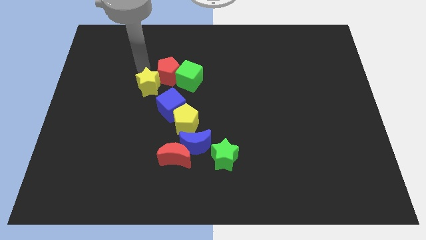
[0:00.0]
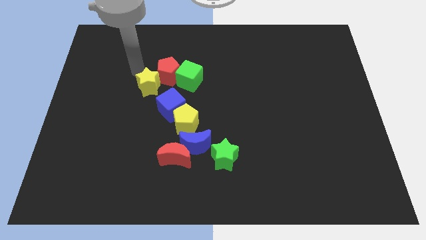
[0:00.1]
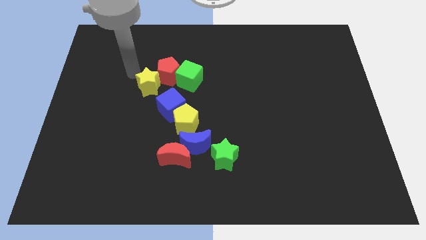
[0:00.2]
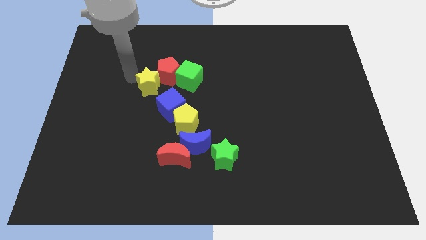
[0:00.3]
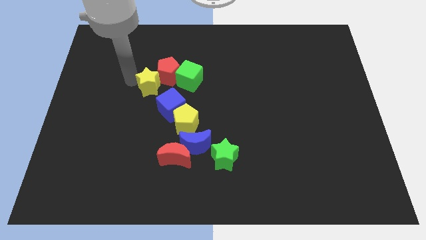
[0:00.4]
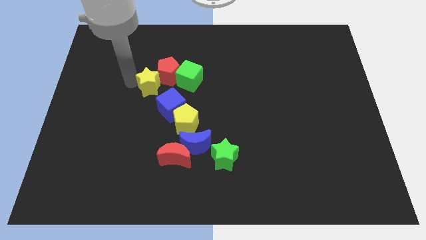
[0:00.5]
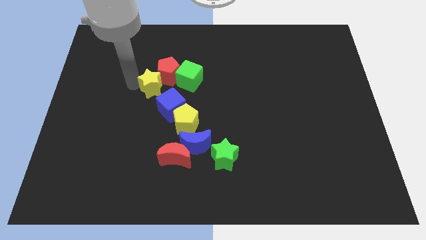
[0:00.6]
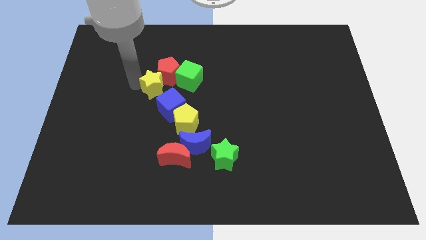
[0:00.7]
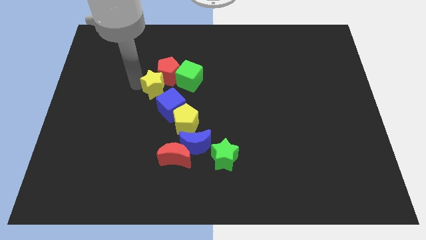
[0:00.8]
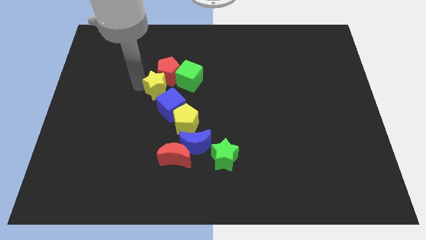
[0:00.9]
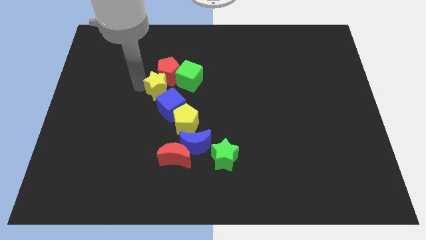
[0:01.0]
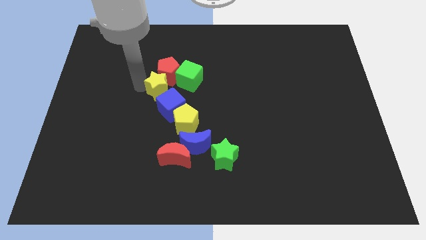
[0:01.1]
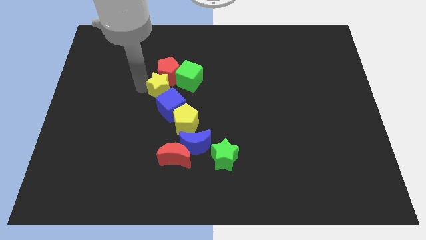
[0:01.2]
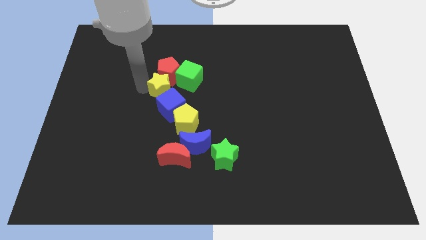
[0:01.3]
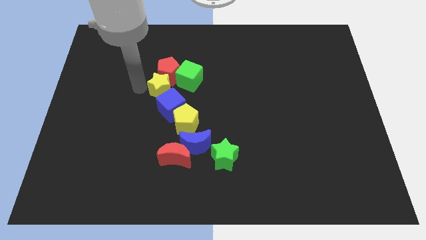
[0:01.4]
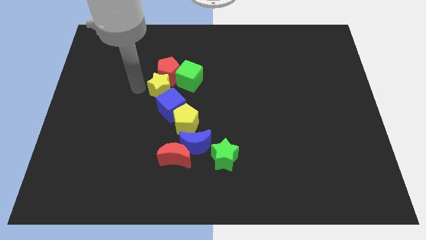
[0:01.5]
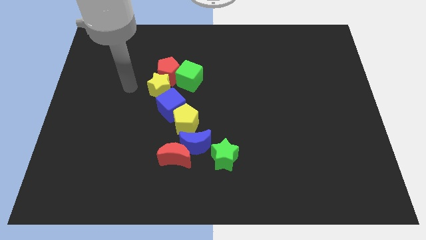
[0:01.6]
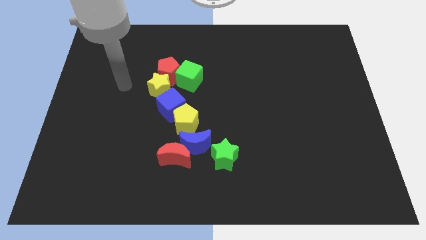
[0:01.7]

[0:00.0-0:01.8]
place the yellow star above the blue cube

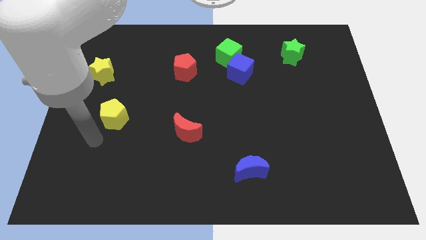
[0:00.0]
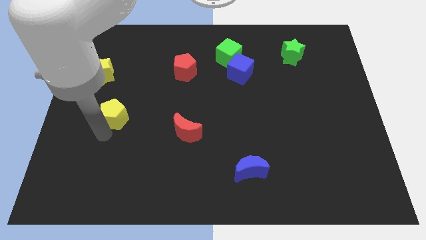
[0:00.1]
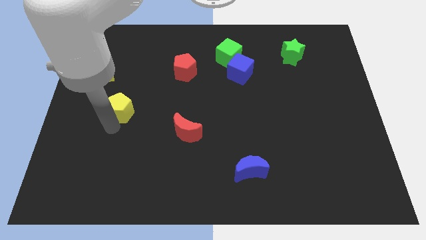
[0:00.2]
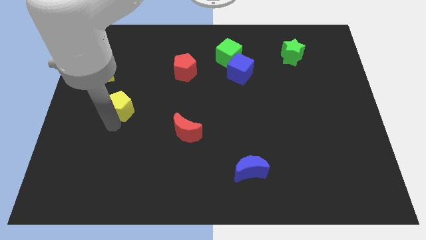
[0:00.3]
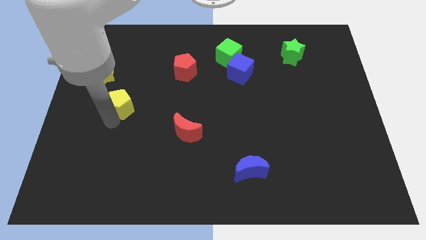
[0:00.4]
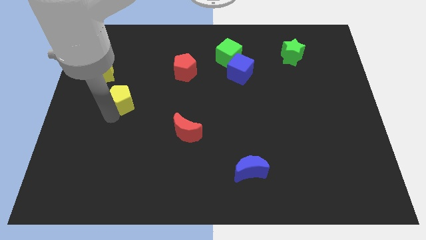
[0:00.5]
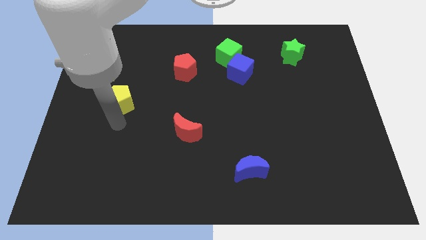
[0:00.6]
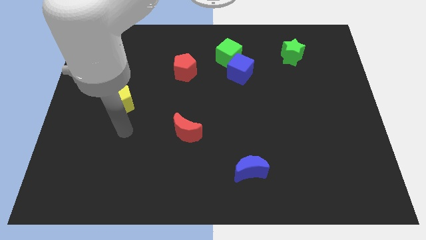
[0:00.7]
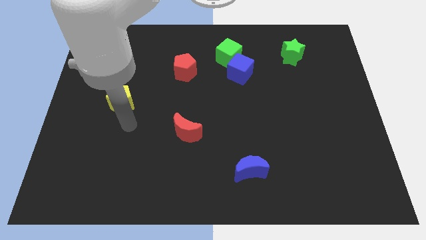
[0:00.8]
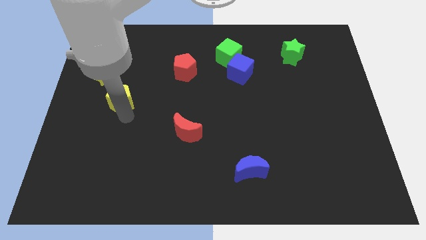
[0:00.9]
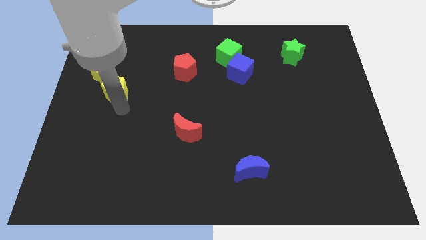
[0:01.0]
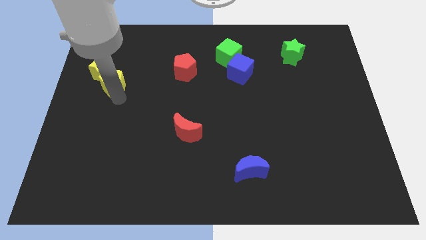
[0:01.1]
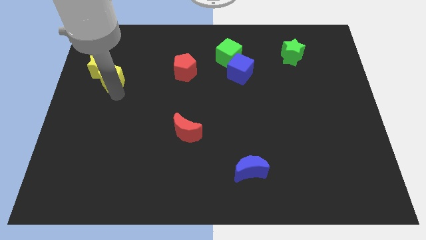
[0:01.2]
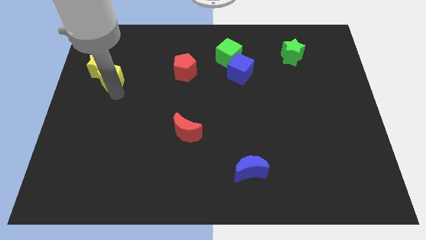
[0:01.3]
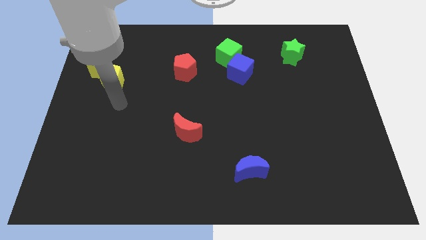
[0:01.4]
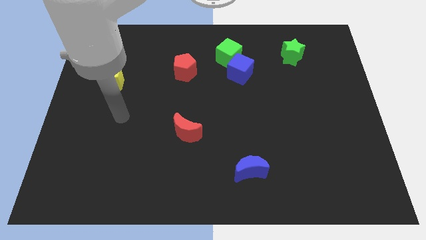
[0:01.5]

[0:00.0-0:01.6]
place the yellow pentagon below to the yellow star

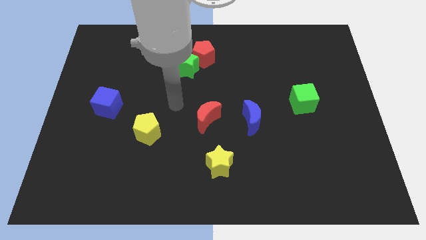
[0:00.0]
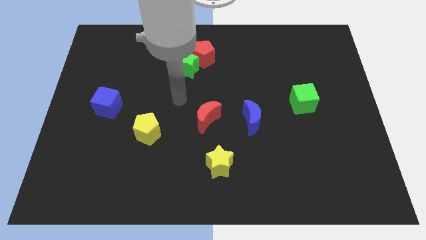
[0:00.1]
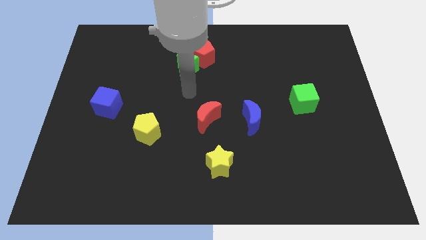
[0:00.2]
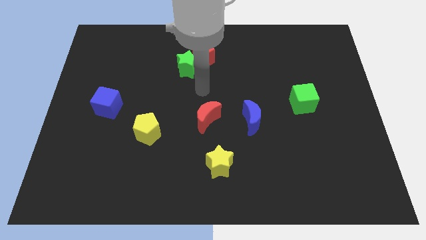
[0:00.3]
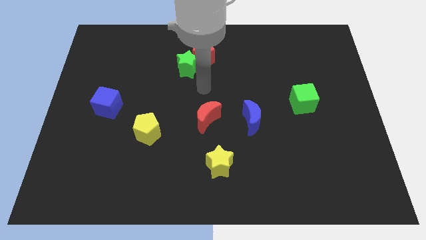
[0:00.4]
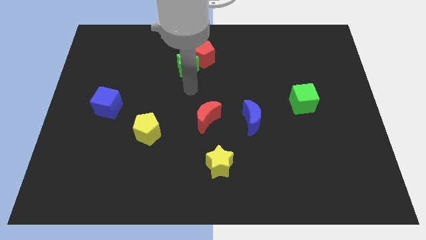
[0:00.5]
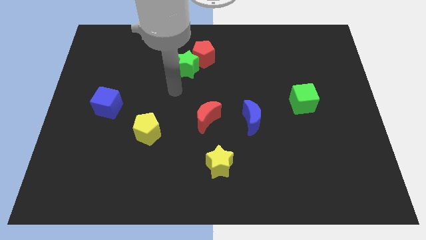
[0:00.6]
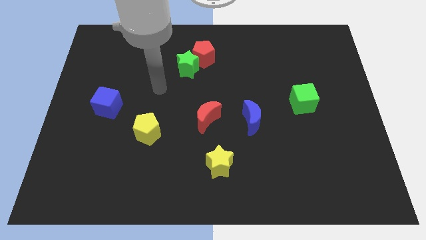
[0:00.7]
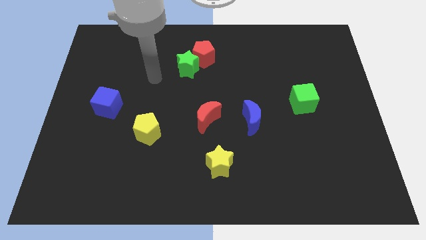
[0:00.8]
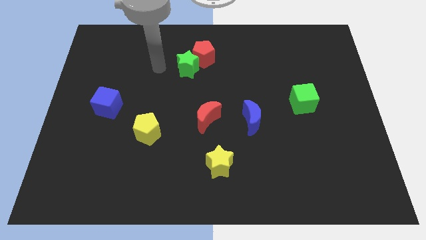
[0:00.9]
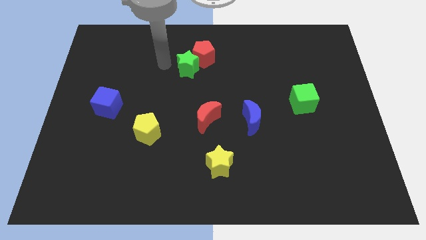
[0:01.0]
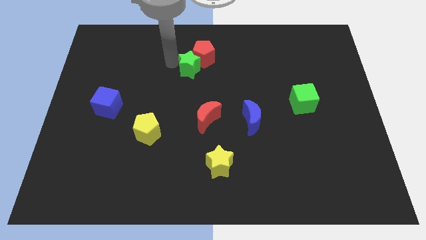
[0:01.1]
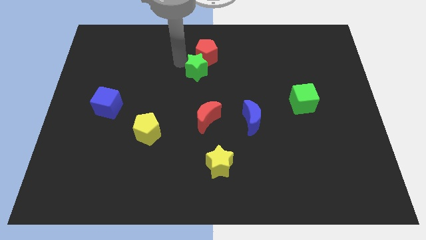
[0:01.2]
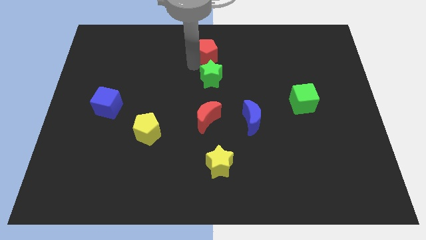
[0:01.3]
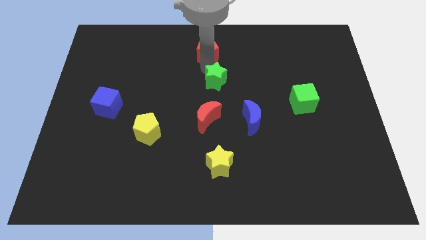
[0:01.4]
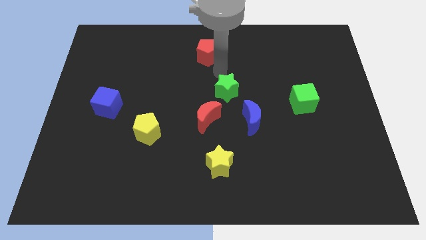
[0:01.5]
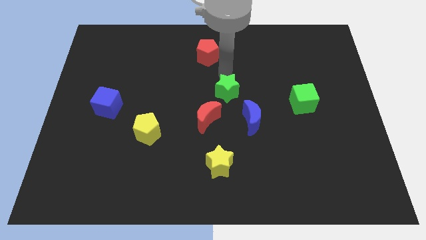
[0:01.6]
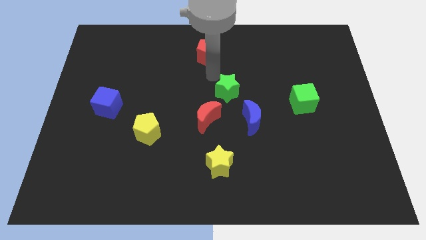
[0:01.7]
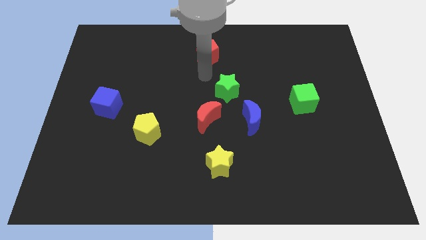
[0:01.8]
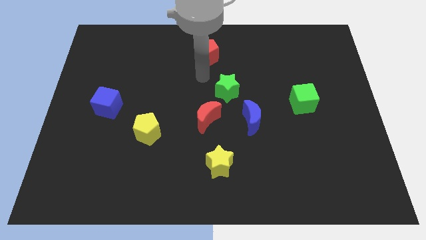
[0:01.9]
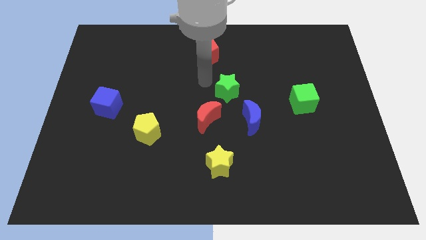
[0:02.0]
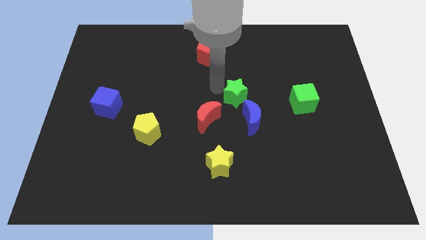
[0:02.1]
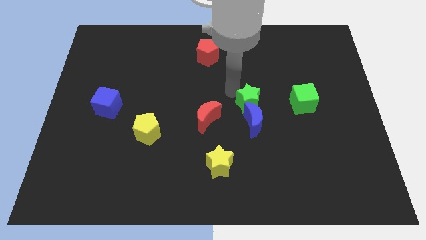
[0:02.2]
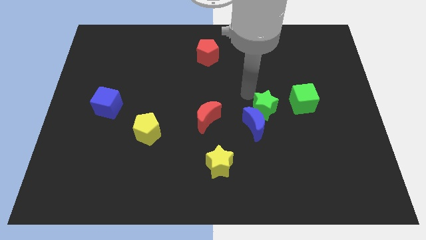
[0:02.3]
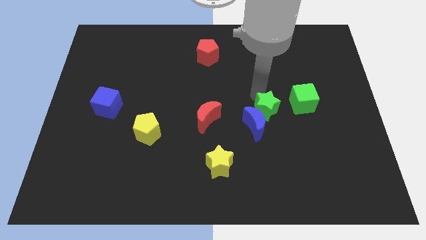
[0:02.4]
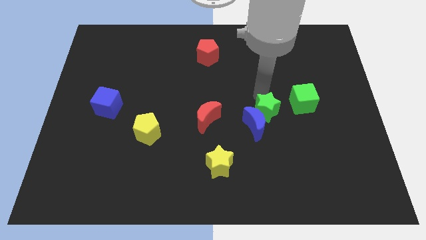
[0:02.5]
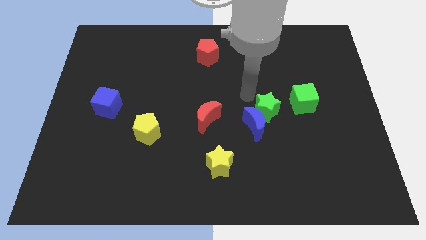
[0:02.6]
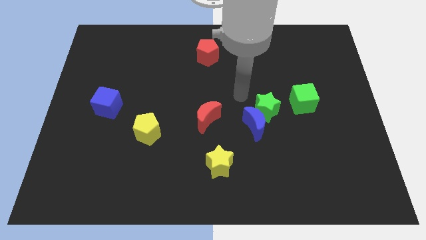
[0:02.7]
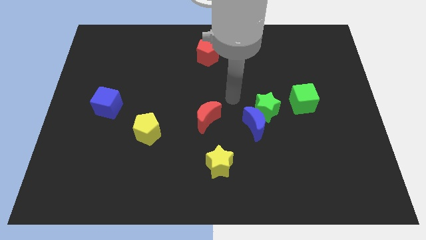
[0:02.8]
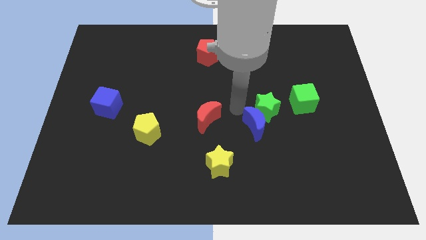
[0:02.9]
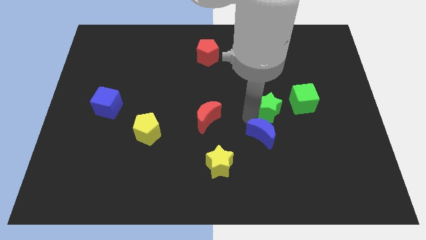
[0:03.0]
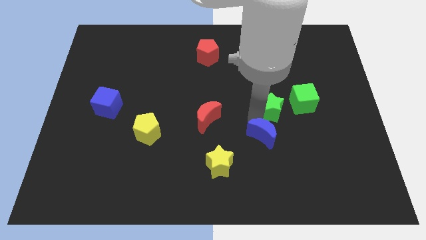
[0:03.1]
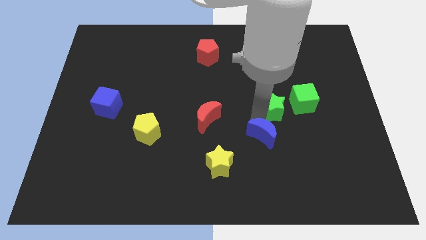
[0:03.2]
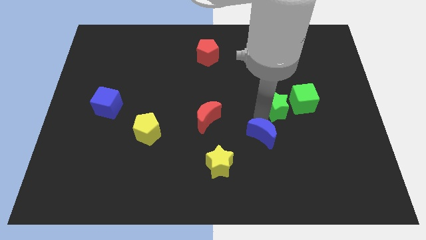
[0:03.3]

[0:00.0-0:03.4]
place the green star left to the green cube

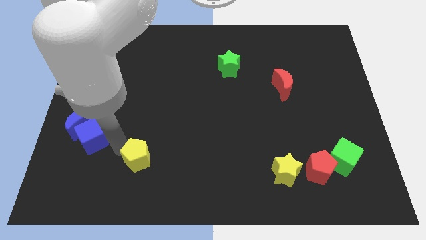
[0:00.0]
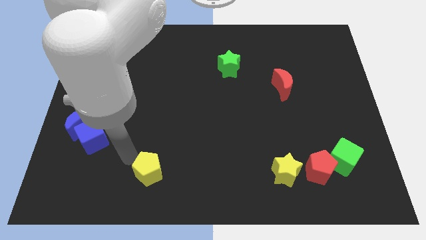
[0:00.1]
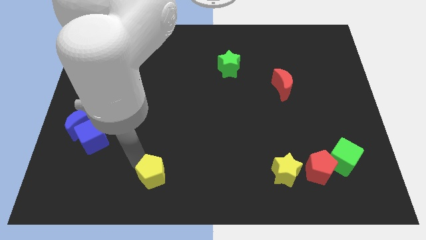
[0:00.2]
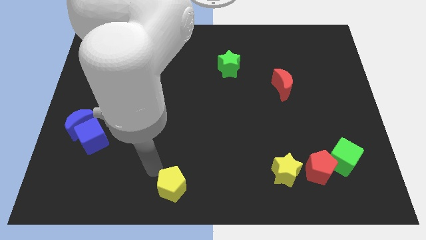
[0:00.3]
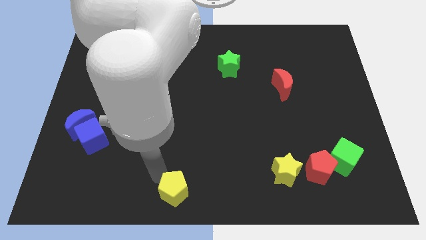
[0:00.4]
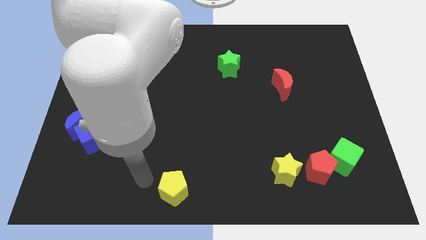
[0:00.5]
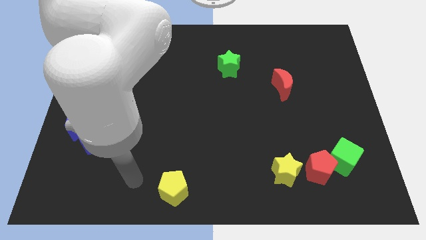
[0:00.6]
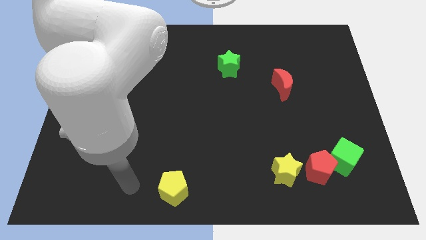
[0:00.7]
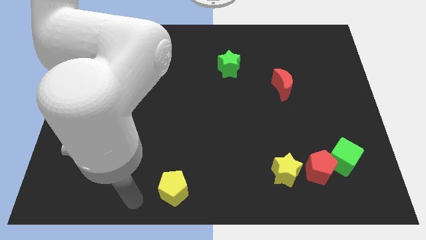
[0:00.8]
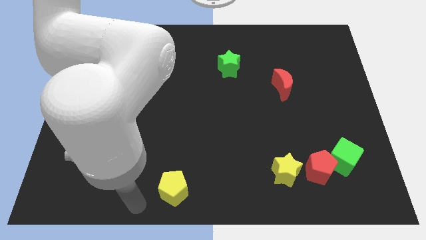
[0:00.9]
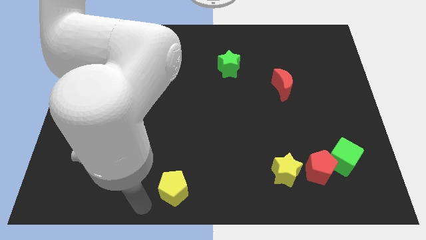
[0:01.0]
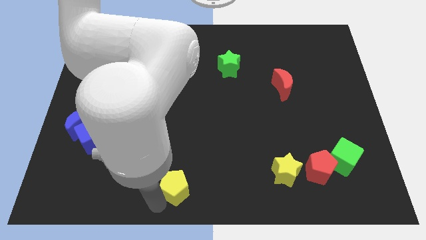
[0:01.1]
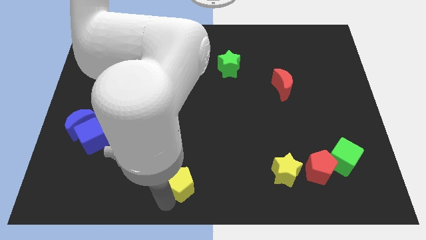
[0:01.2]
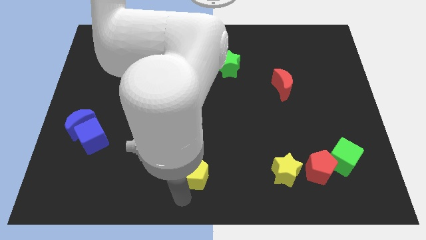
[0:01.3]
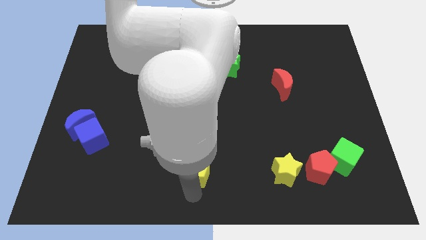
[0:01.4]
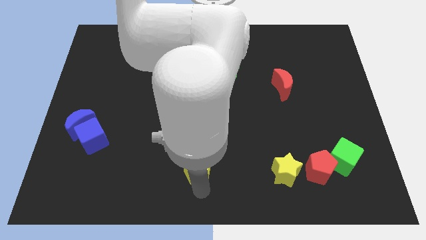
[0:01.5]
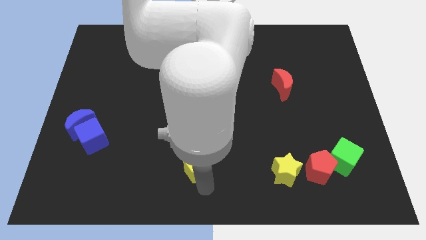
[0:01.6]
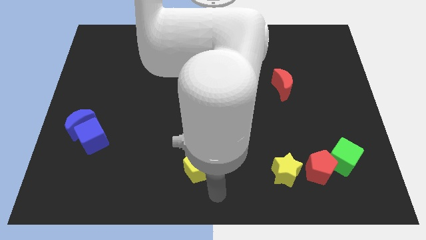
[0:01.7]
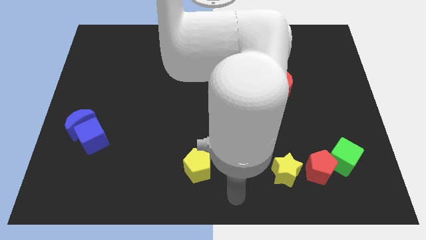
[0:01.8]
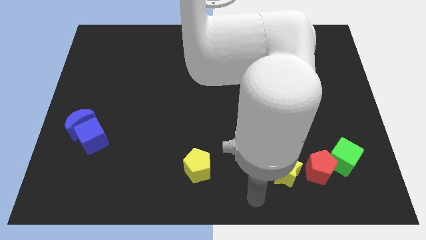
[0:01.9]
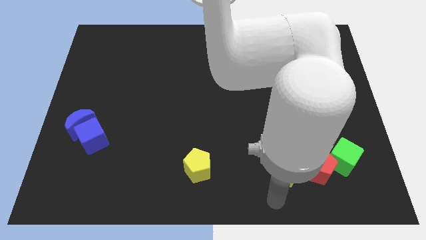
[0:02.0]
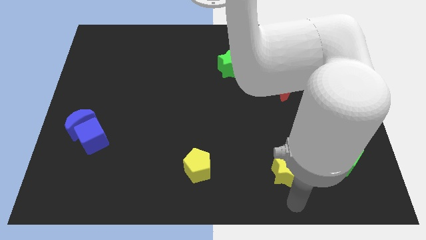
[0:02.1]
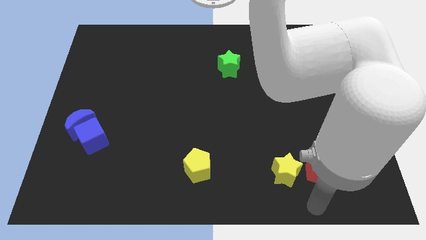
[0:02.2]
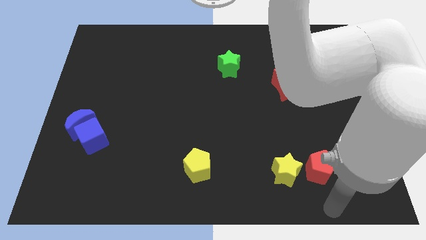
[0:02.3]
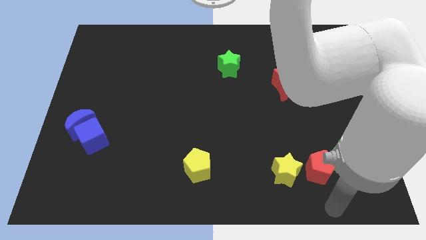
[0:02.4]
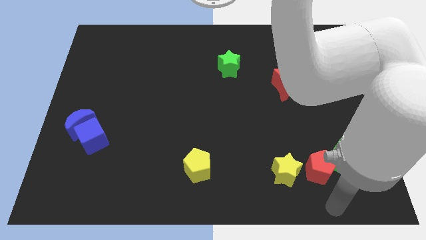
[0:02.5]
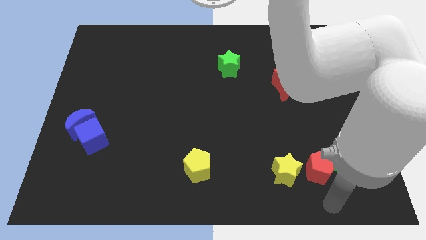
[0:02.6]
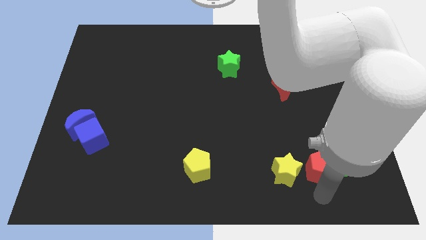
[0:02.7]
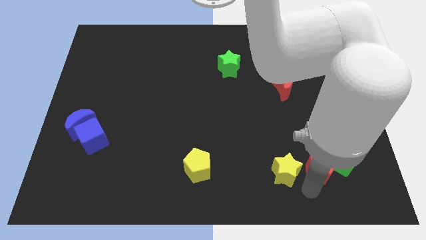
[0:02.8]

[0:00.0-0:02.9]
place the yellow pentagon to the left of the yellow star
